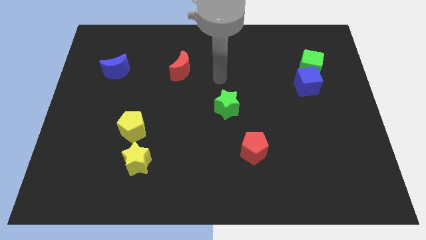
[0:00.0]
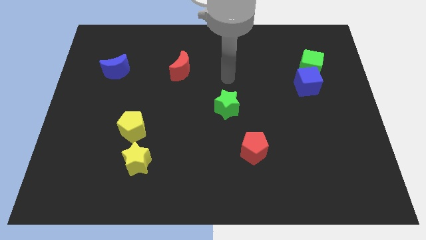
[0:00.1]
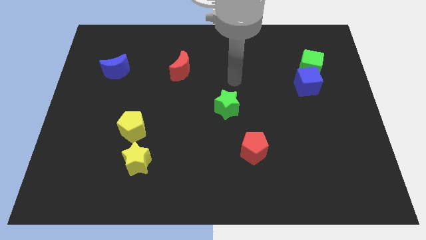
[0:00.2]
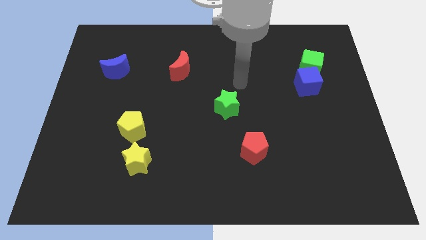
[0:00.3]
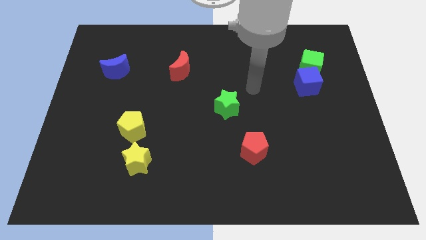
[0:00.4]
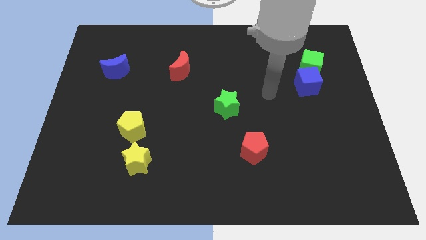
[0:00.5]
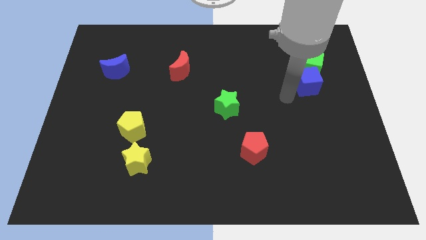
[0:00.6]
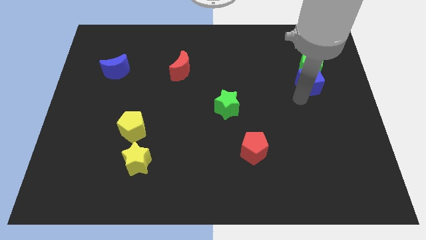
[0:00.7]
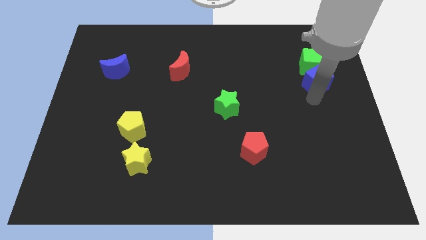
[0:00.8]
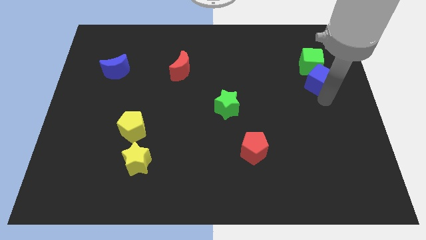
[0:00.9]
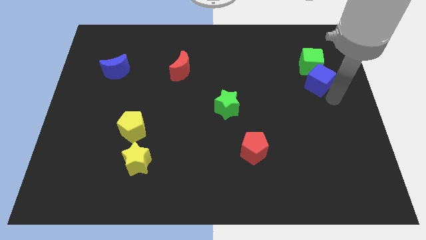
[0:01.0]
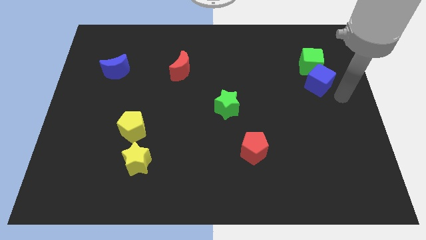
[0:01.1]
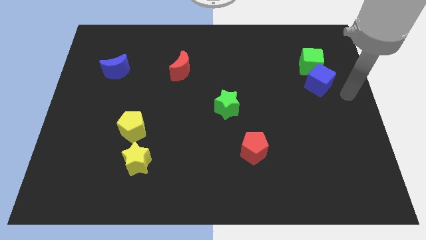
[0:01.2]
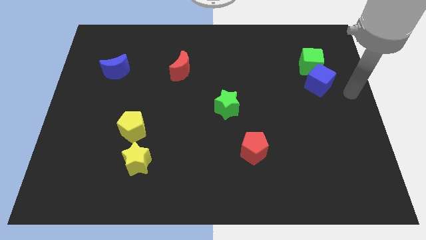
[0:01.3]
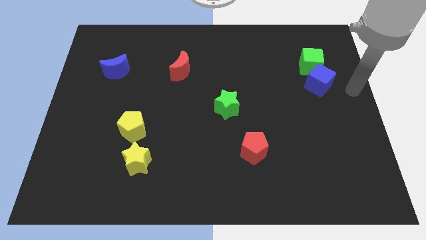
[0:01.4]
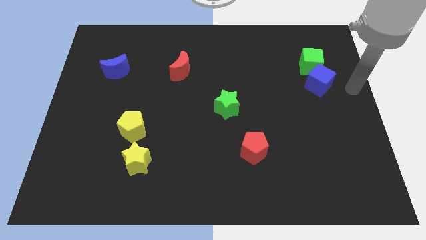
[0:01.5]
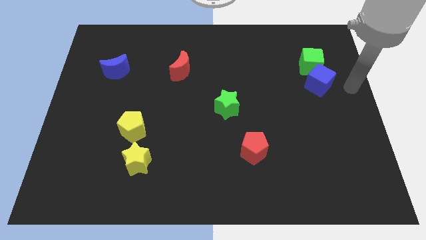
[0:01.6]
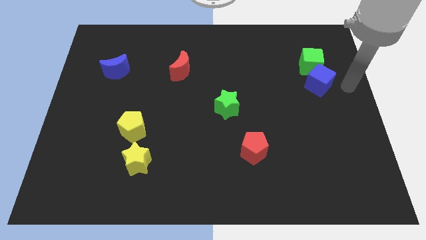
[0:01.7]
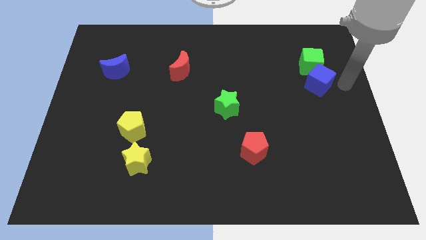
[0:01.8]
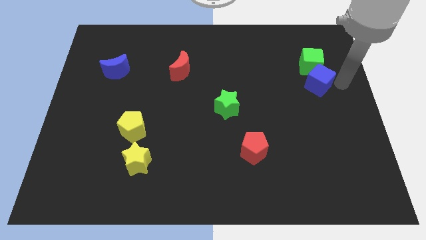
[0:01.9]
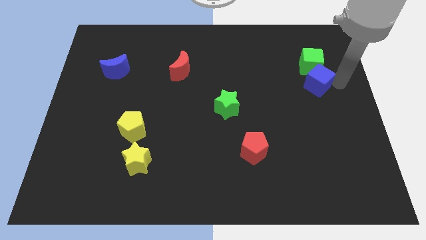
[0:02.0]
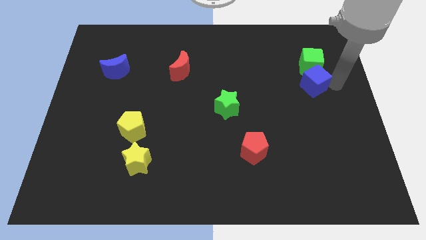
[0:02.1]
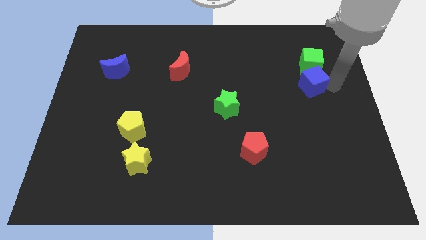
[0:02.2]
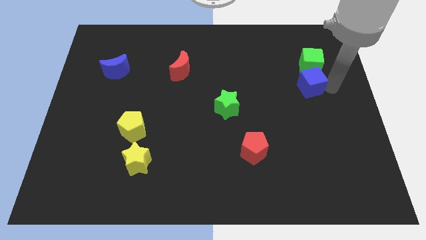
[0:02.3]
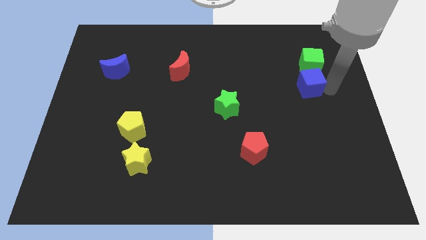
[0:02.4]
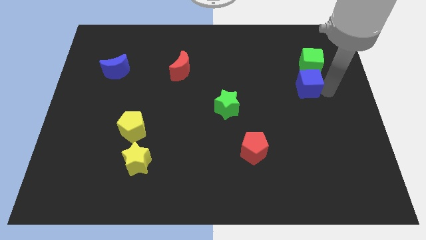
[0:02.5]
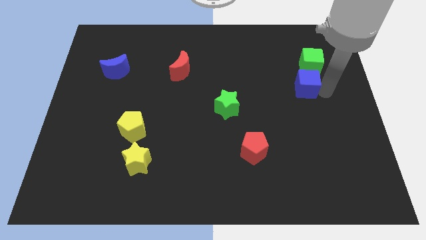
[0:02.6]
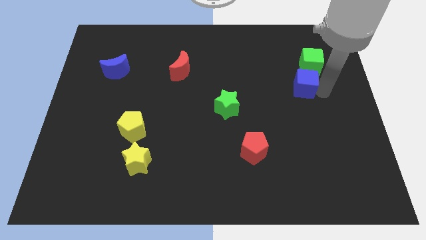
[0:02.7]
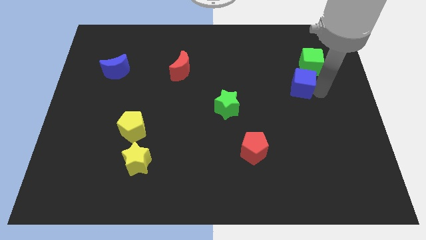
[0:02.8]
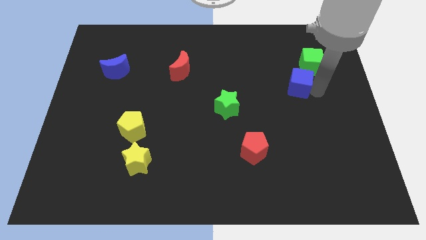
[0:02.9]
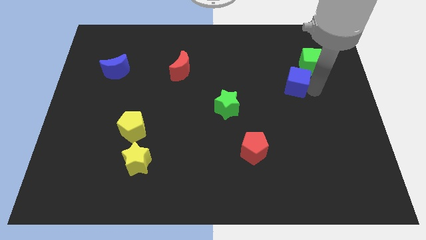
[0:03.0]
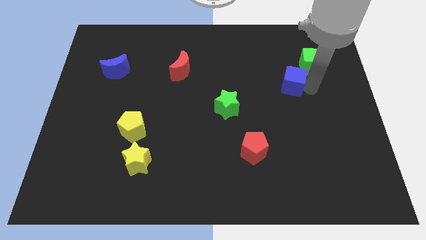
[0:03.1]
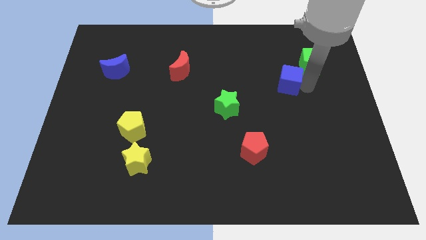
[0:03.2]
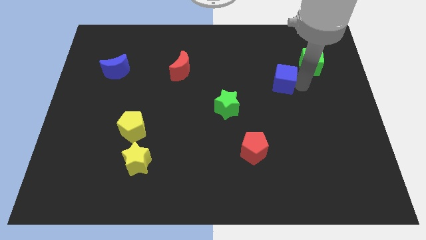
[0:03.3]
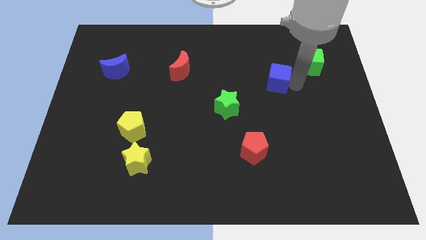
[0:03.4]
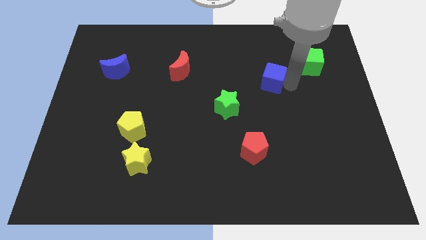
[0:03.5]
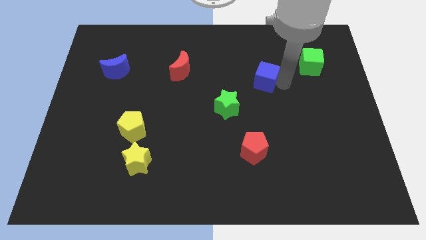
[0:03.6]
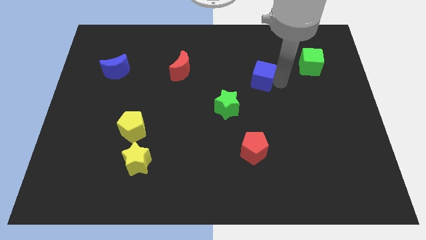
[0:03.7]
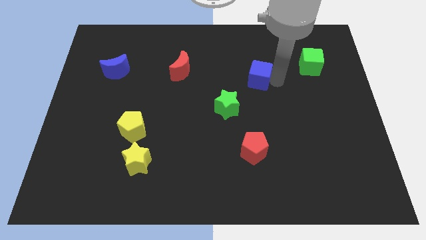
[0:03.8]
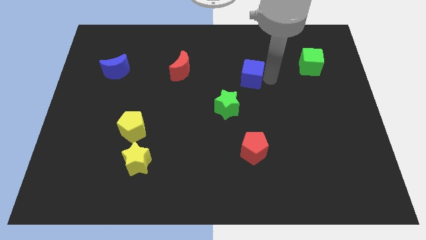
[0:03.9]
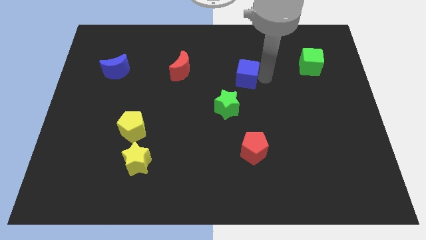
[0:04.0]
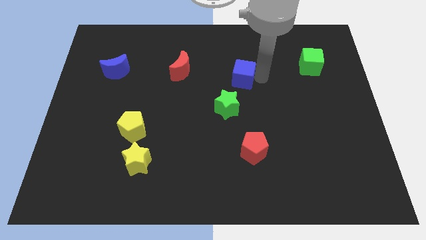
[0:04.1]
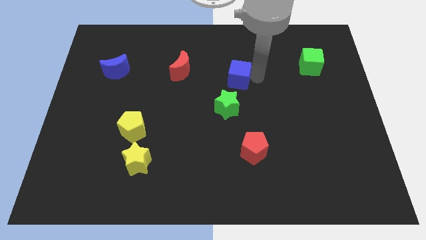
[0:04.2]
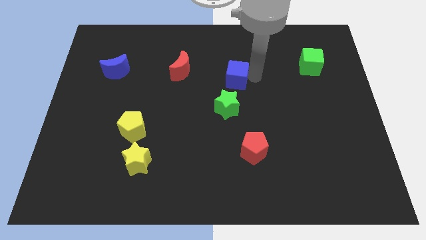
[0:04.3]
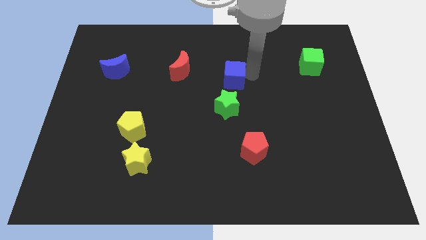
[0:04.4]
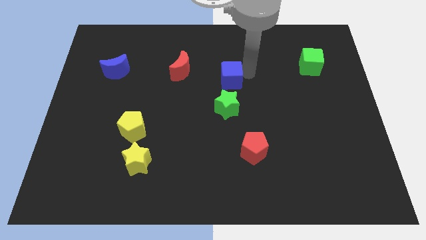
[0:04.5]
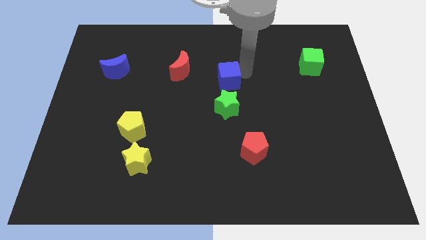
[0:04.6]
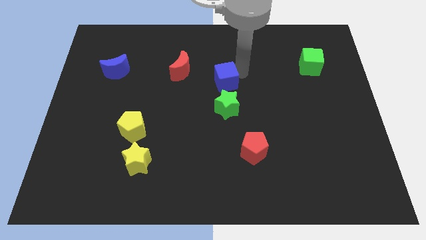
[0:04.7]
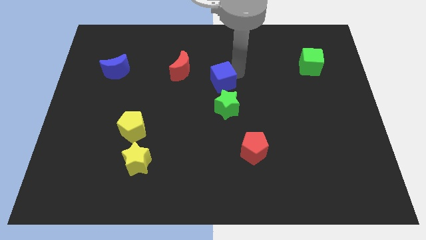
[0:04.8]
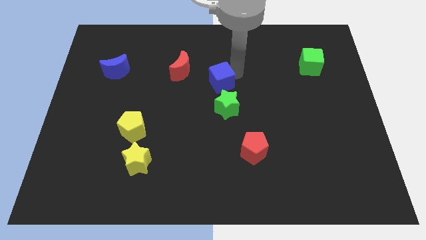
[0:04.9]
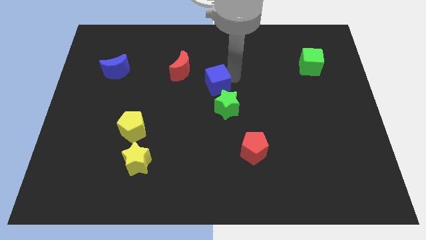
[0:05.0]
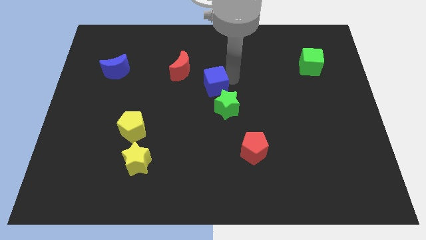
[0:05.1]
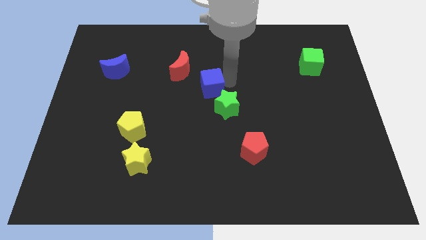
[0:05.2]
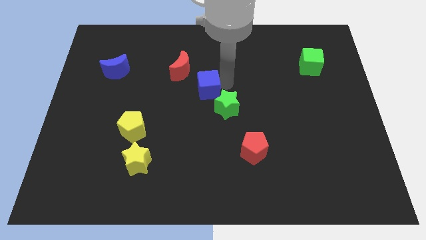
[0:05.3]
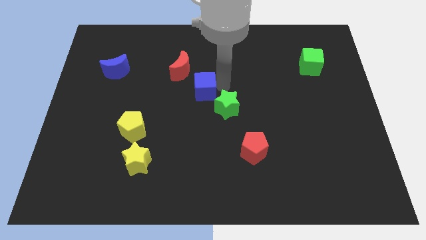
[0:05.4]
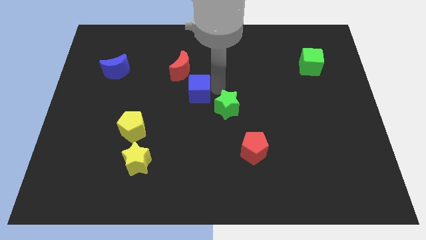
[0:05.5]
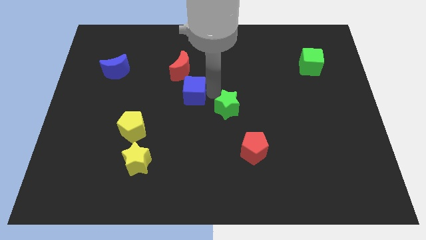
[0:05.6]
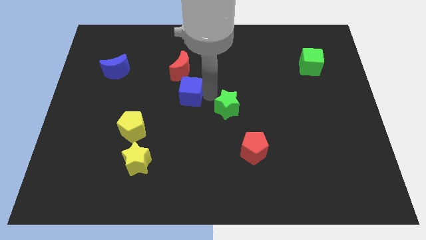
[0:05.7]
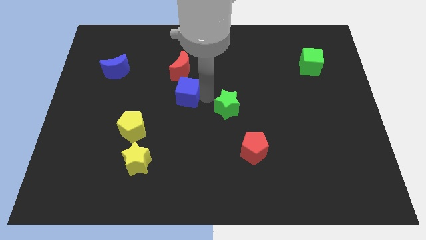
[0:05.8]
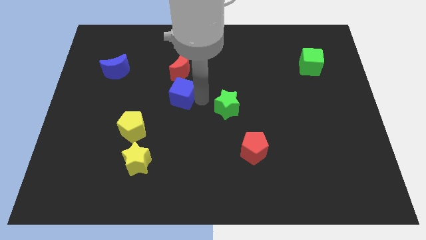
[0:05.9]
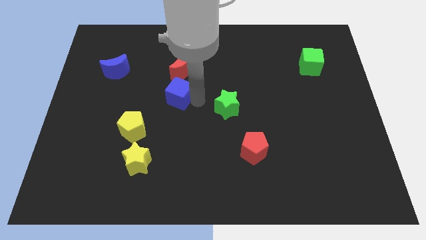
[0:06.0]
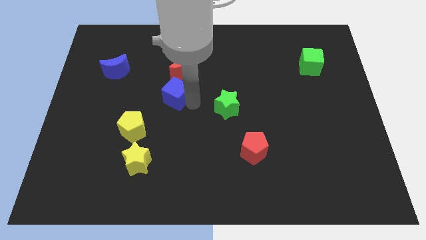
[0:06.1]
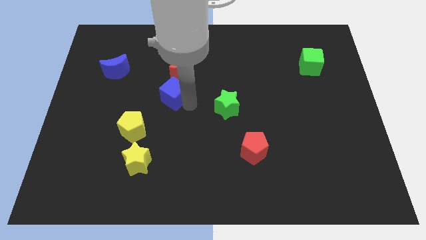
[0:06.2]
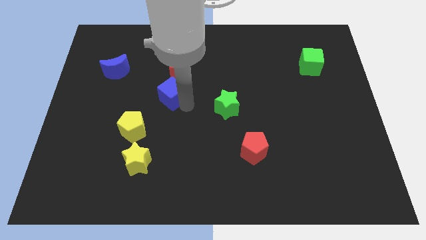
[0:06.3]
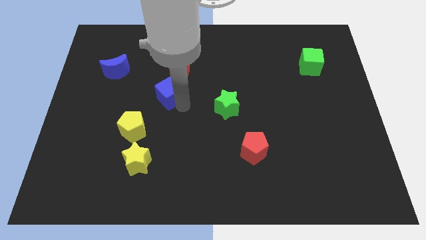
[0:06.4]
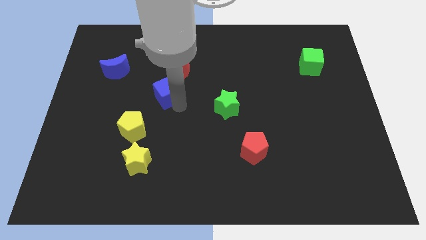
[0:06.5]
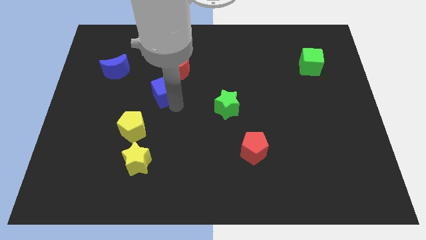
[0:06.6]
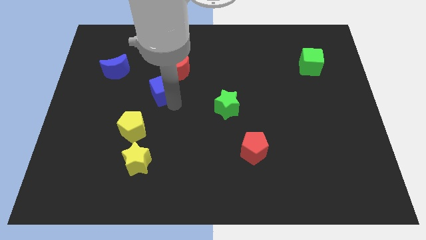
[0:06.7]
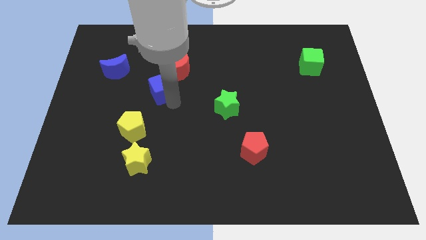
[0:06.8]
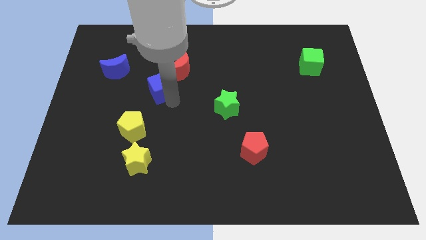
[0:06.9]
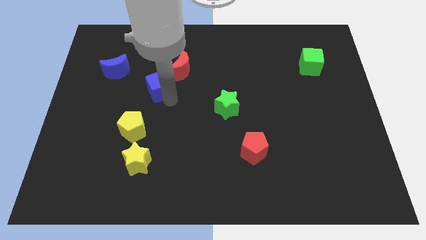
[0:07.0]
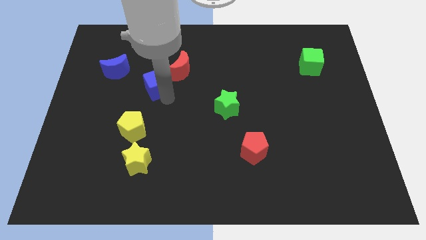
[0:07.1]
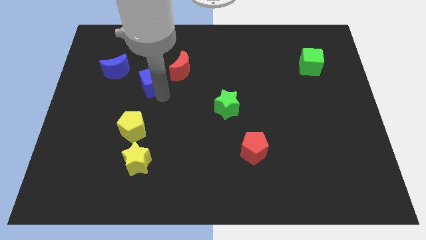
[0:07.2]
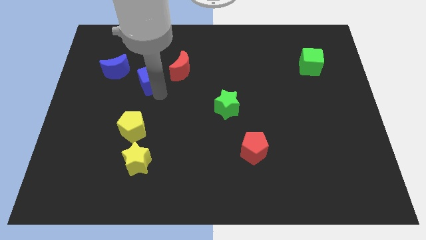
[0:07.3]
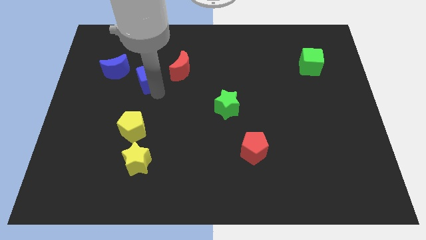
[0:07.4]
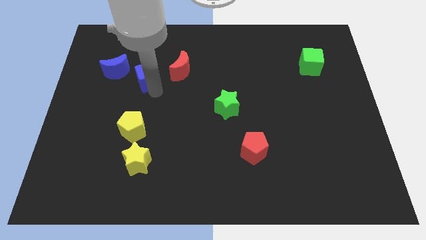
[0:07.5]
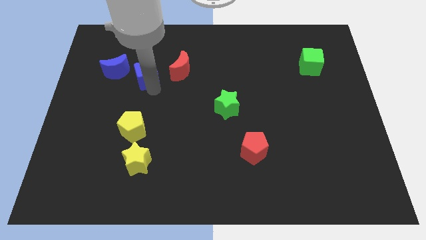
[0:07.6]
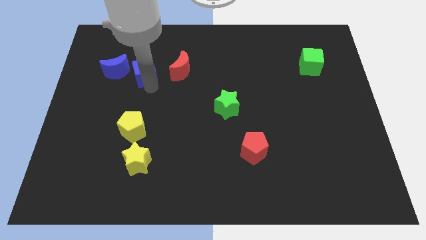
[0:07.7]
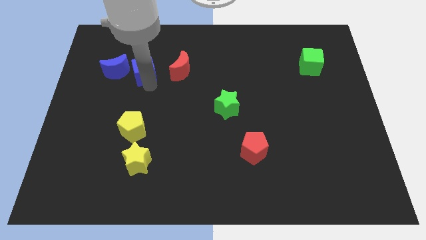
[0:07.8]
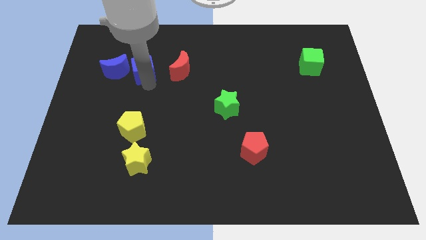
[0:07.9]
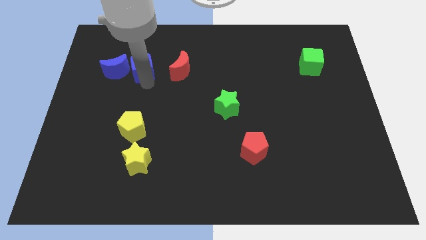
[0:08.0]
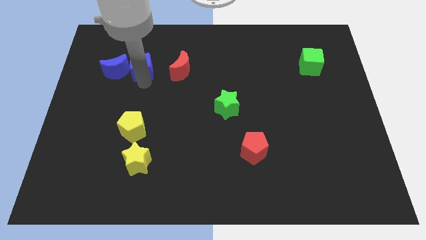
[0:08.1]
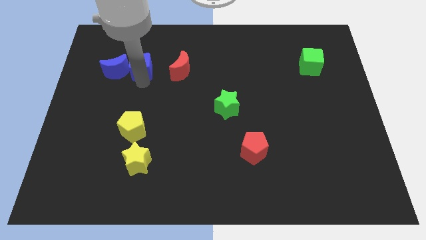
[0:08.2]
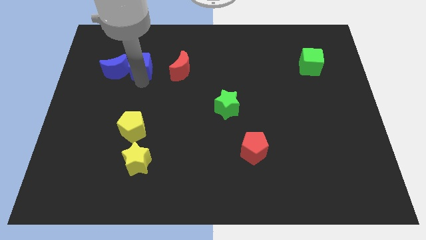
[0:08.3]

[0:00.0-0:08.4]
slide the blue cube next to the blue moon

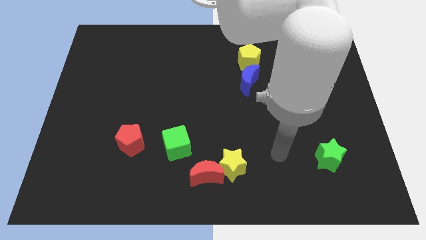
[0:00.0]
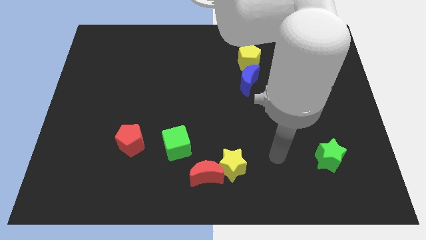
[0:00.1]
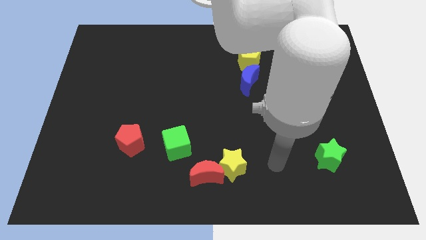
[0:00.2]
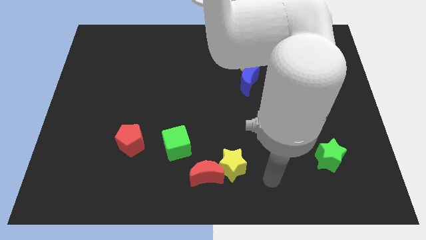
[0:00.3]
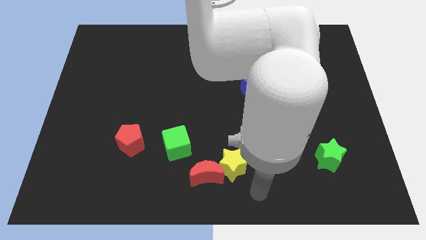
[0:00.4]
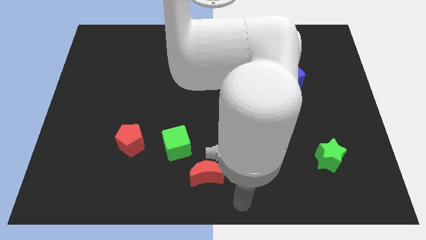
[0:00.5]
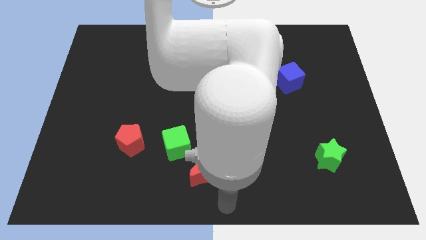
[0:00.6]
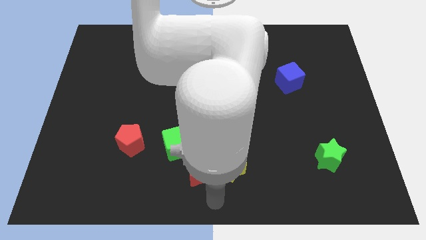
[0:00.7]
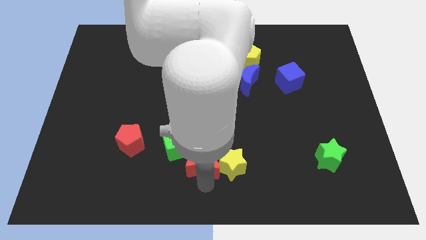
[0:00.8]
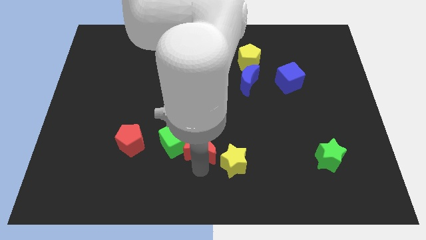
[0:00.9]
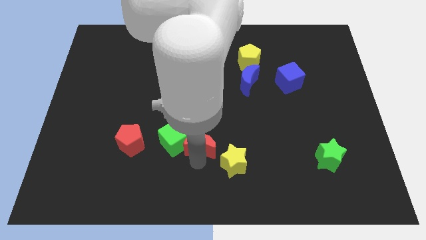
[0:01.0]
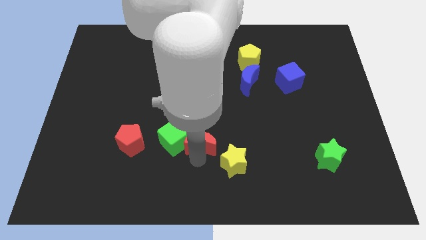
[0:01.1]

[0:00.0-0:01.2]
put the red moon towards the green cube
